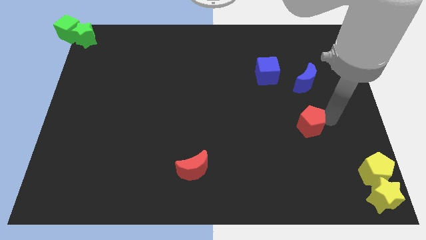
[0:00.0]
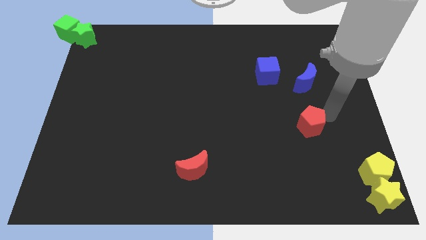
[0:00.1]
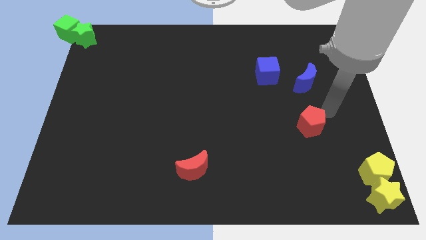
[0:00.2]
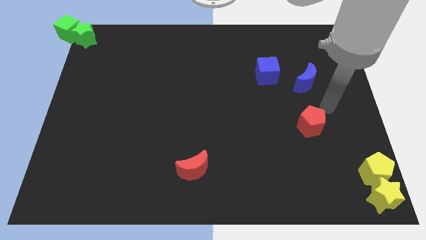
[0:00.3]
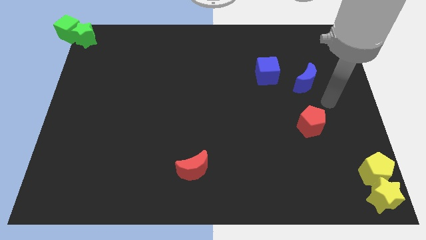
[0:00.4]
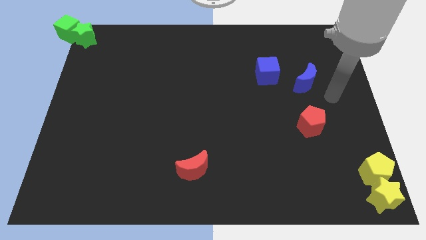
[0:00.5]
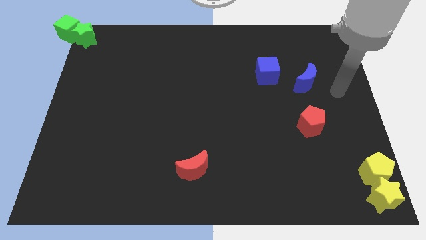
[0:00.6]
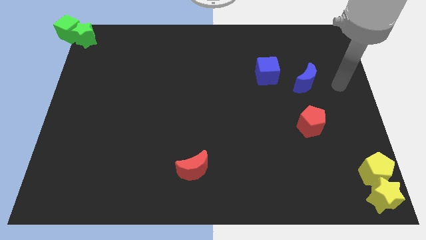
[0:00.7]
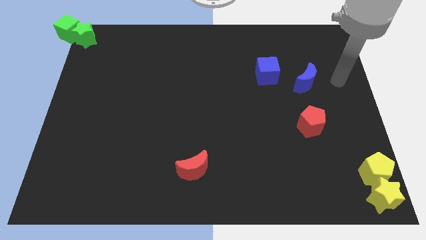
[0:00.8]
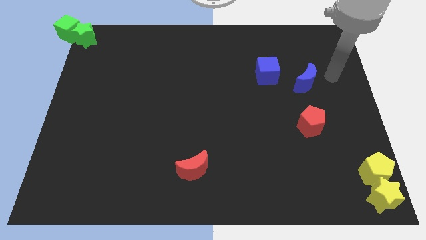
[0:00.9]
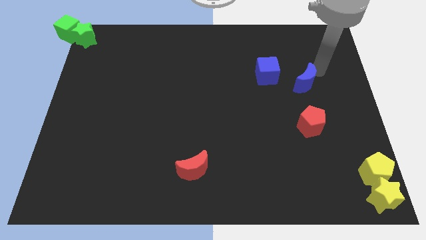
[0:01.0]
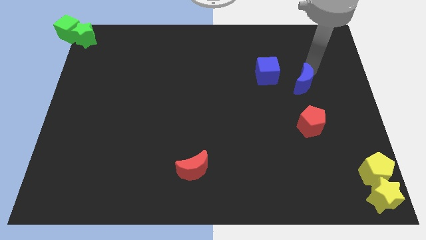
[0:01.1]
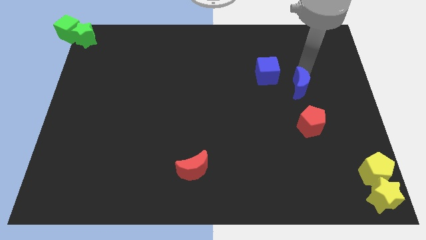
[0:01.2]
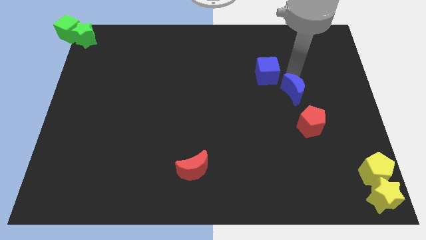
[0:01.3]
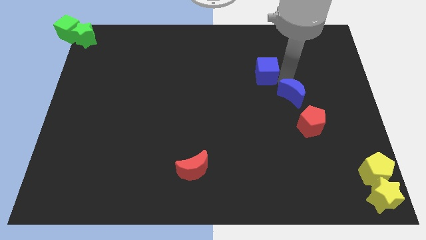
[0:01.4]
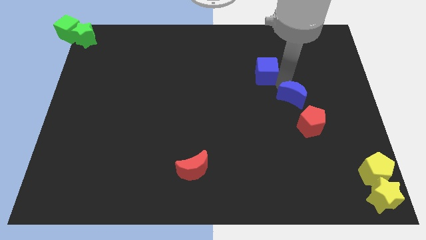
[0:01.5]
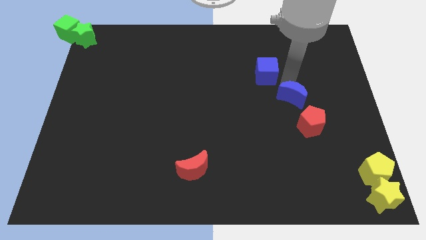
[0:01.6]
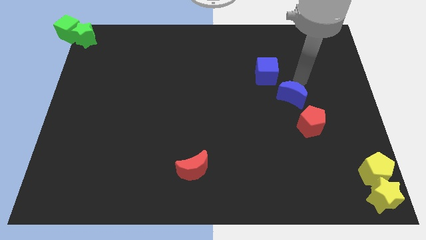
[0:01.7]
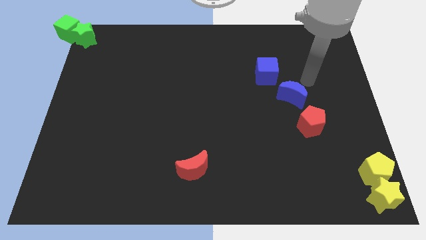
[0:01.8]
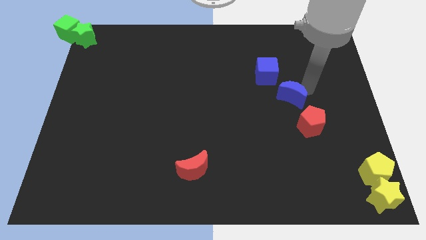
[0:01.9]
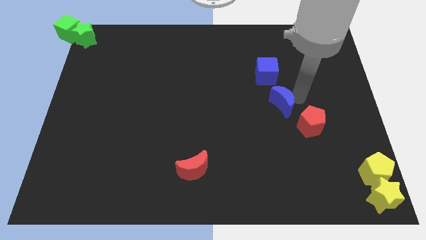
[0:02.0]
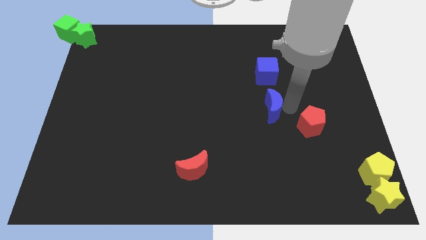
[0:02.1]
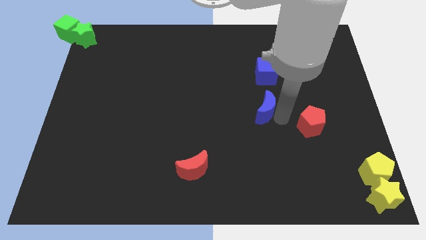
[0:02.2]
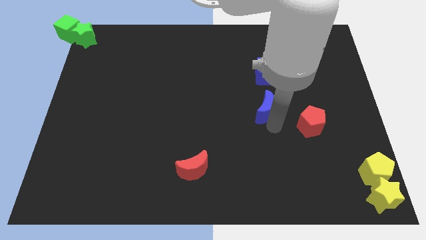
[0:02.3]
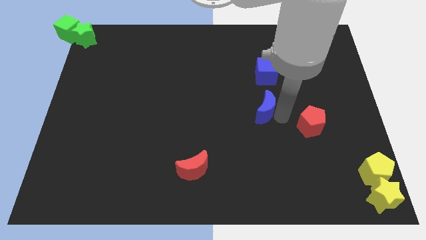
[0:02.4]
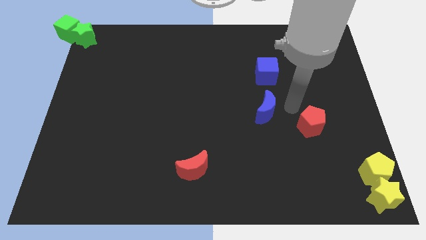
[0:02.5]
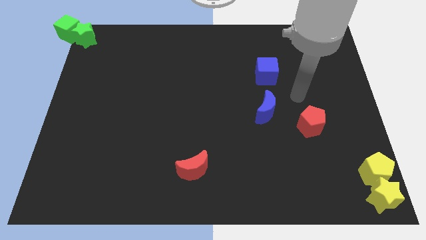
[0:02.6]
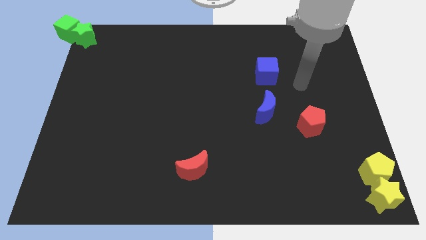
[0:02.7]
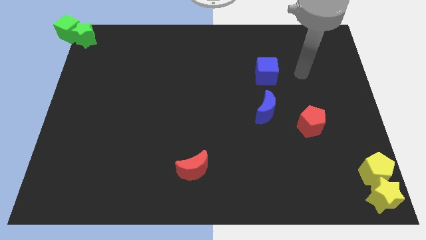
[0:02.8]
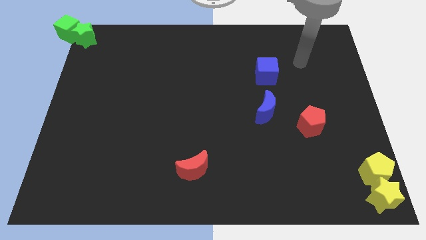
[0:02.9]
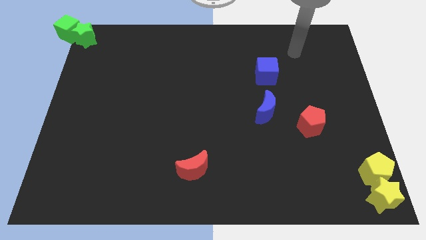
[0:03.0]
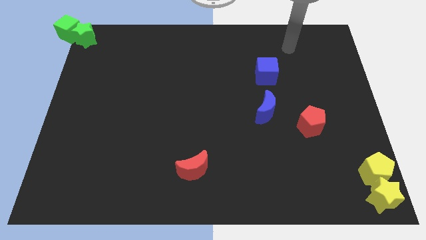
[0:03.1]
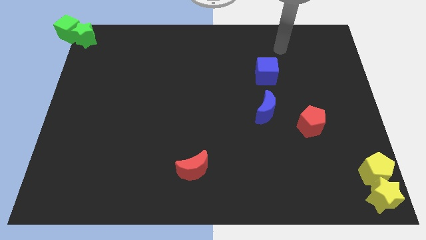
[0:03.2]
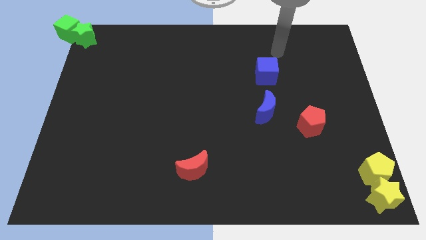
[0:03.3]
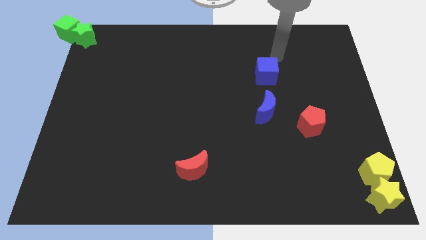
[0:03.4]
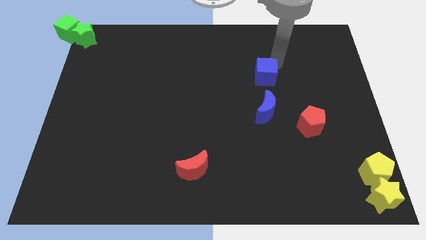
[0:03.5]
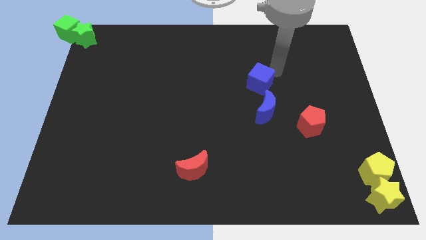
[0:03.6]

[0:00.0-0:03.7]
push the blue moon below the blue cube

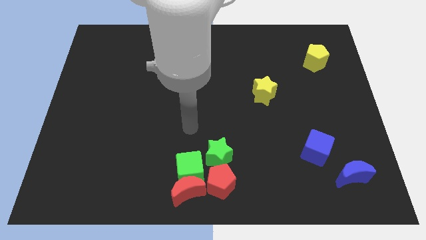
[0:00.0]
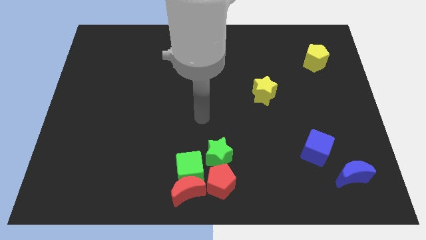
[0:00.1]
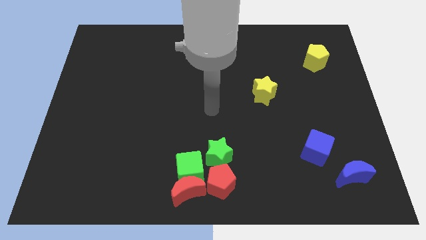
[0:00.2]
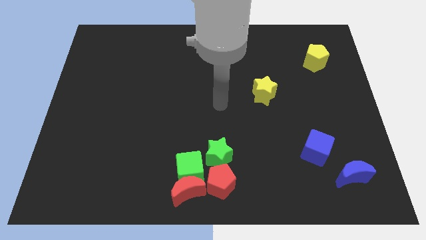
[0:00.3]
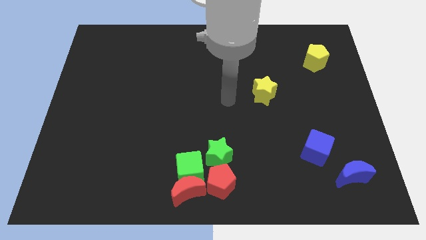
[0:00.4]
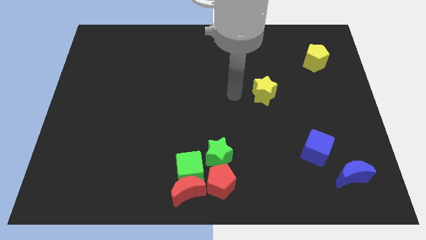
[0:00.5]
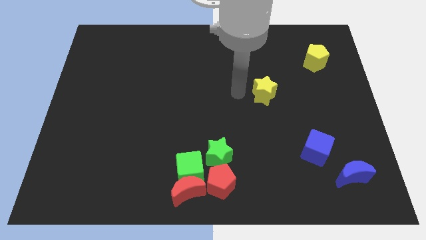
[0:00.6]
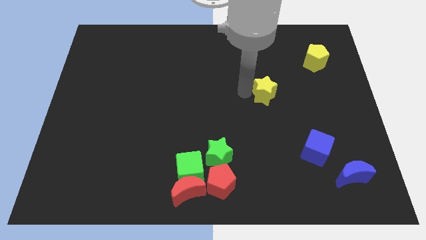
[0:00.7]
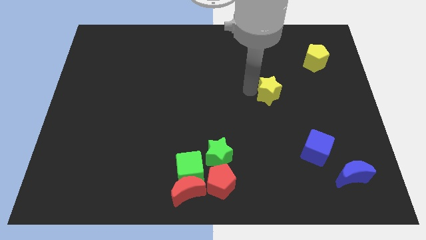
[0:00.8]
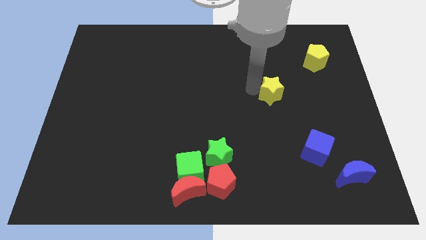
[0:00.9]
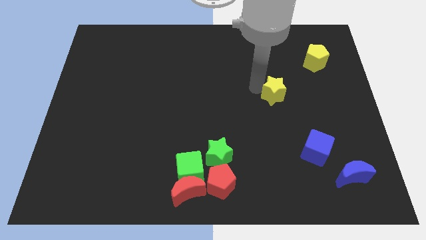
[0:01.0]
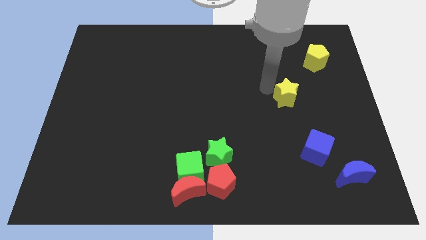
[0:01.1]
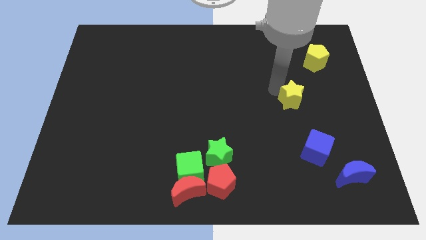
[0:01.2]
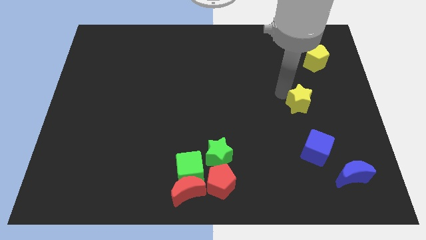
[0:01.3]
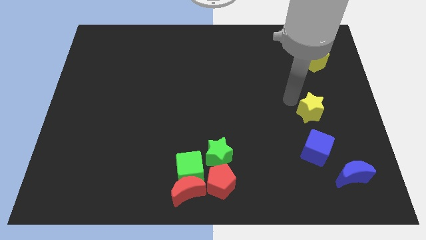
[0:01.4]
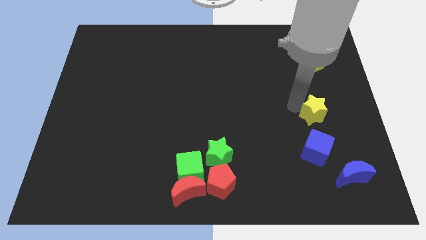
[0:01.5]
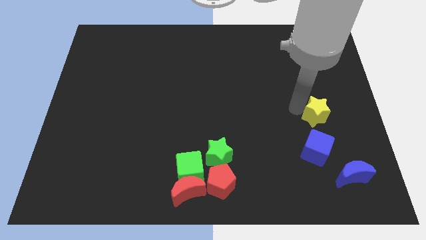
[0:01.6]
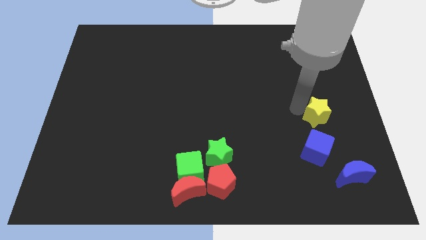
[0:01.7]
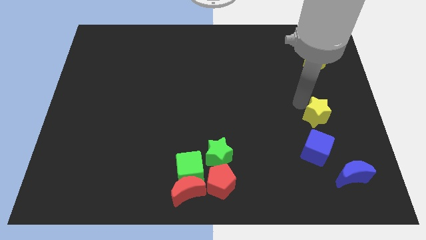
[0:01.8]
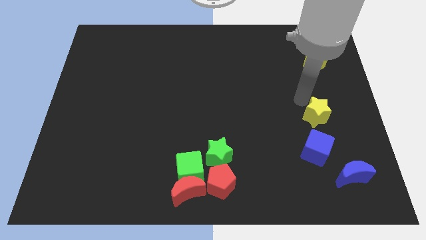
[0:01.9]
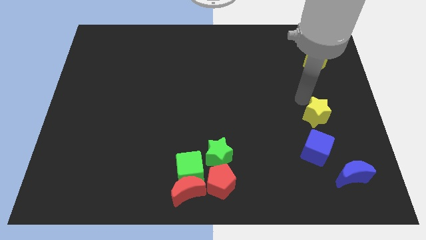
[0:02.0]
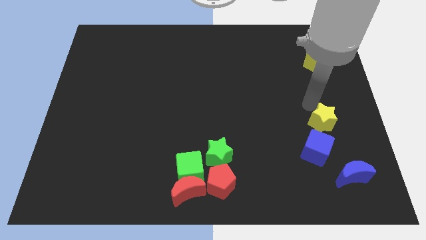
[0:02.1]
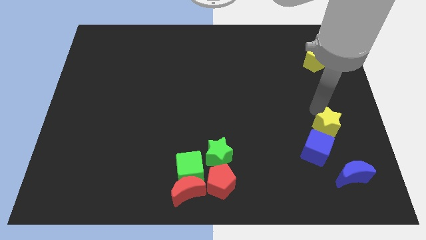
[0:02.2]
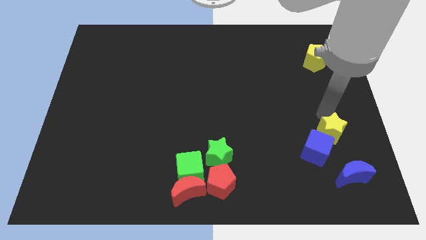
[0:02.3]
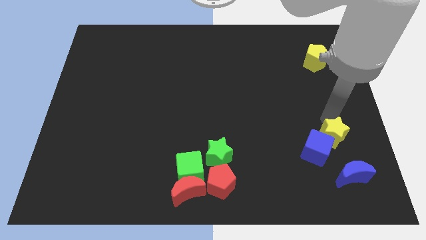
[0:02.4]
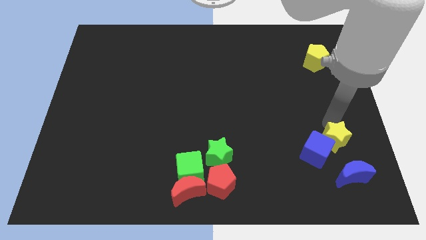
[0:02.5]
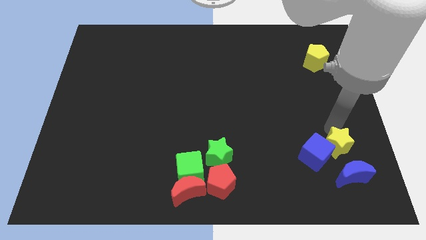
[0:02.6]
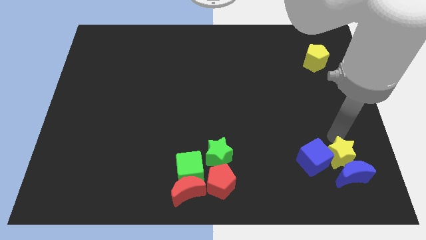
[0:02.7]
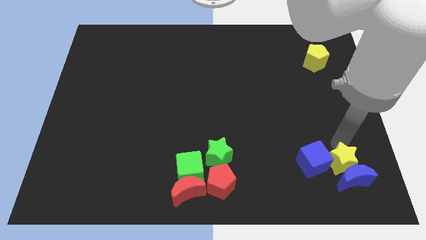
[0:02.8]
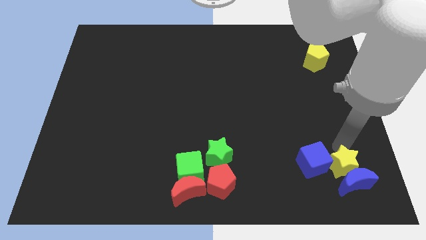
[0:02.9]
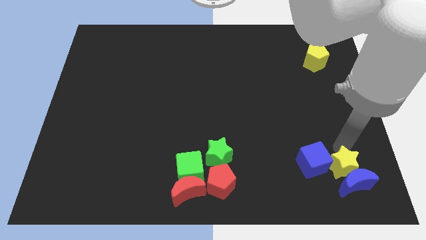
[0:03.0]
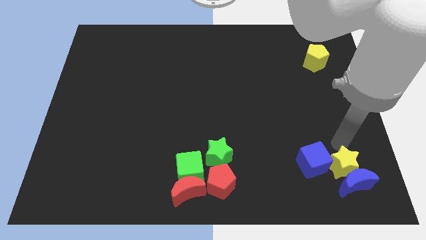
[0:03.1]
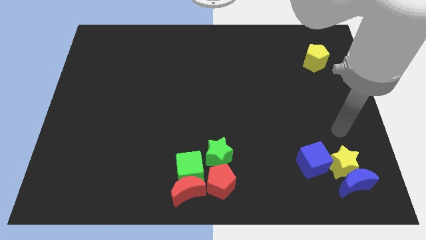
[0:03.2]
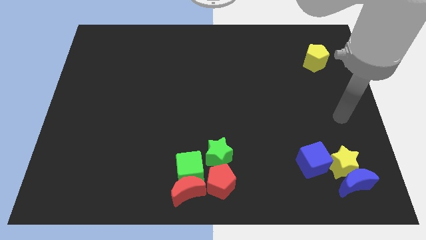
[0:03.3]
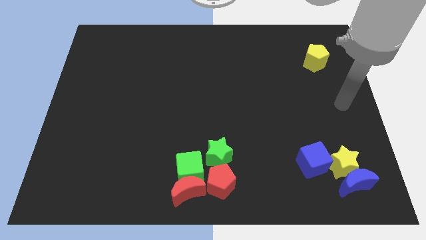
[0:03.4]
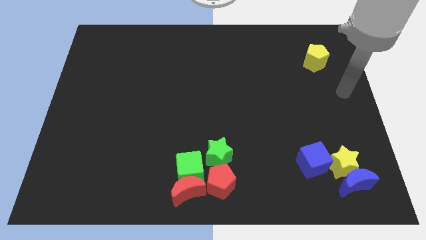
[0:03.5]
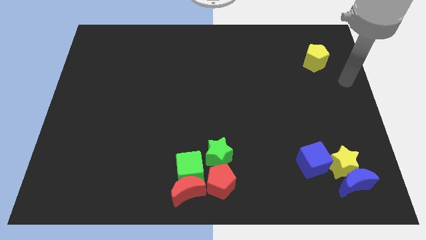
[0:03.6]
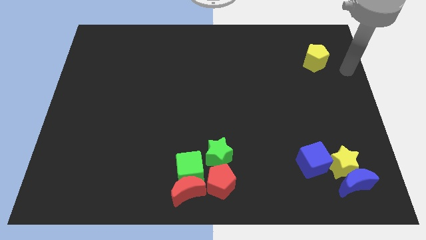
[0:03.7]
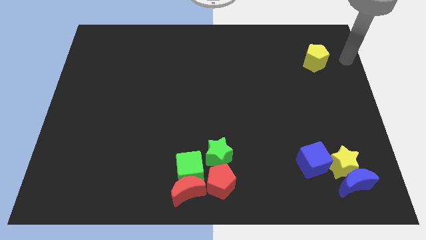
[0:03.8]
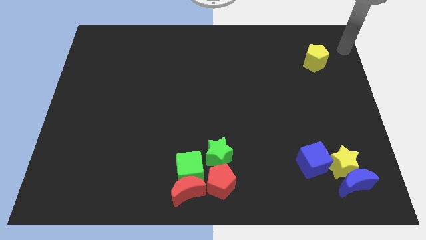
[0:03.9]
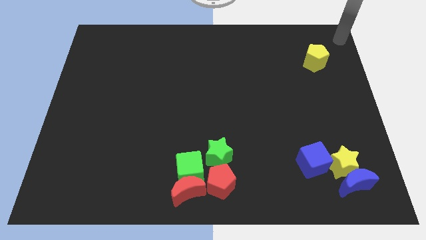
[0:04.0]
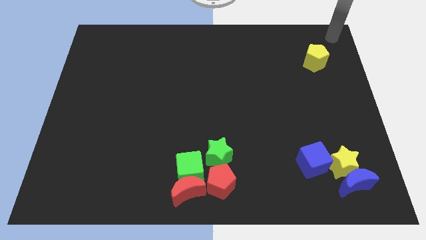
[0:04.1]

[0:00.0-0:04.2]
move the yellow star in between the blue block

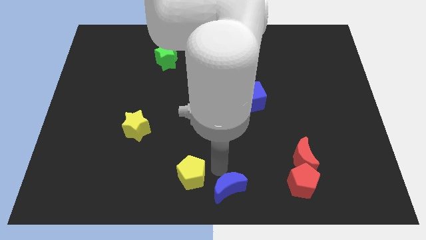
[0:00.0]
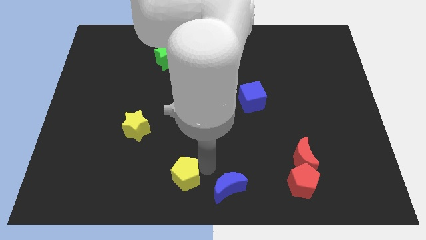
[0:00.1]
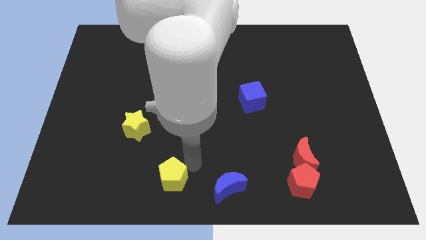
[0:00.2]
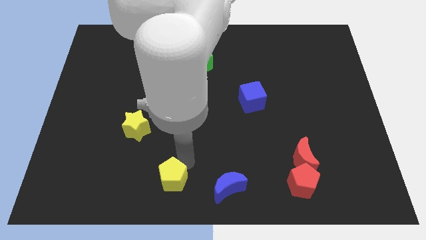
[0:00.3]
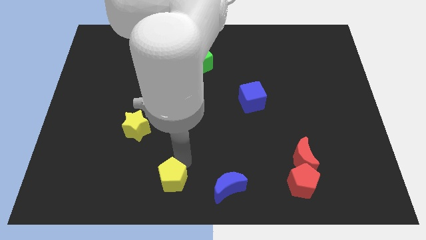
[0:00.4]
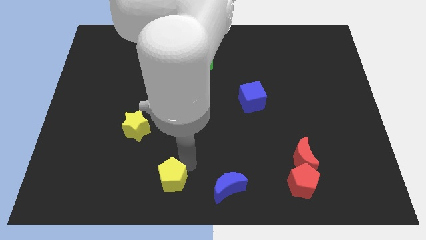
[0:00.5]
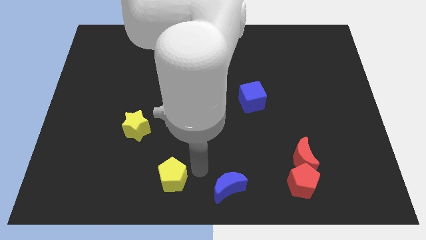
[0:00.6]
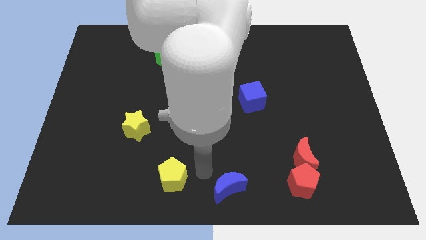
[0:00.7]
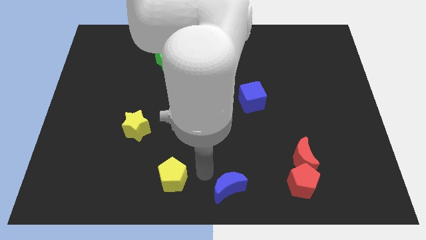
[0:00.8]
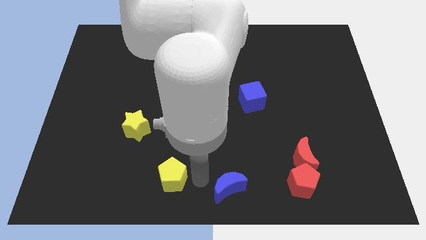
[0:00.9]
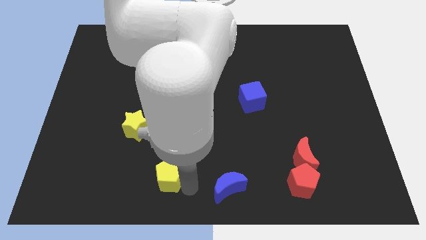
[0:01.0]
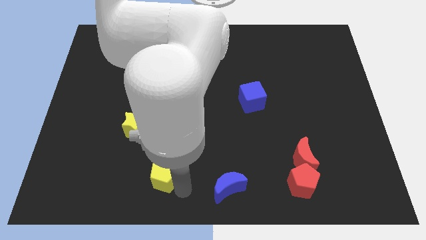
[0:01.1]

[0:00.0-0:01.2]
touch at the right side of the yellow pentagon
